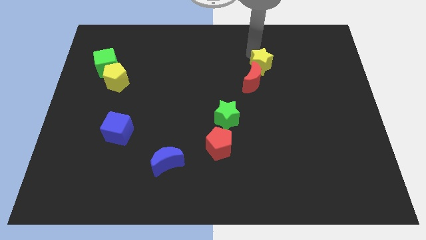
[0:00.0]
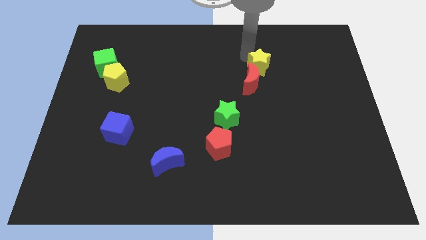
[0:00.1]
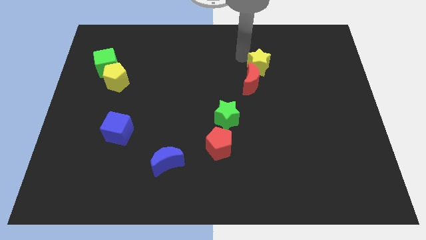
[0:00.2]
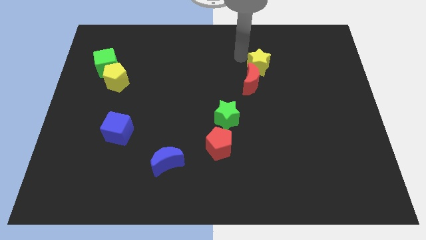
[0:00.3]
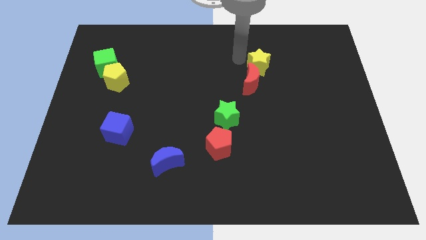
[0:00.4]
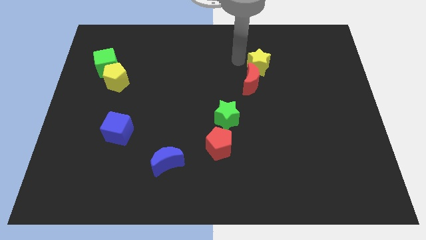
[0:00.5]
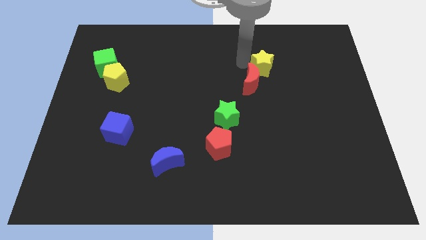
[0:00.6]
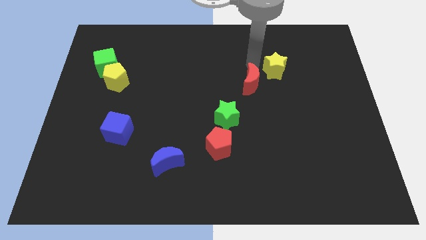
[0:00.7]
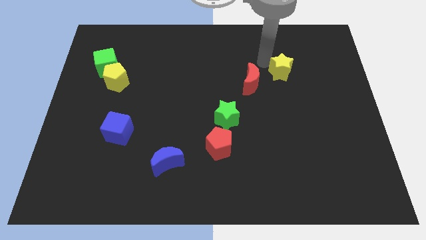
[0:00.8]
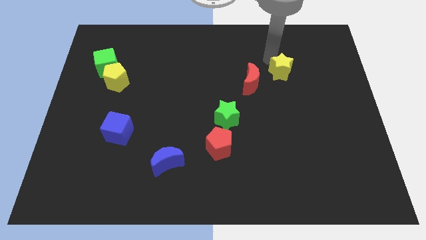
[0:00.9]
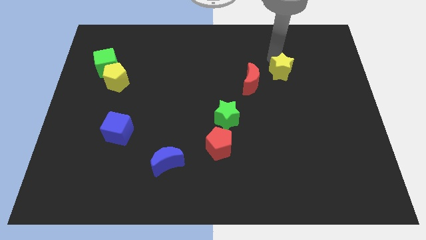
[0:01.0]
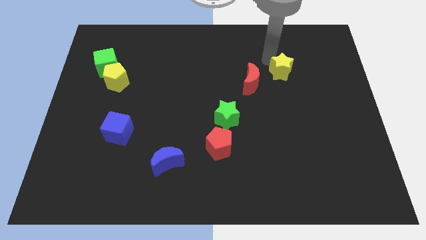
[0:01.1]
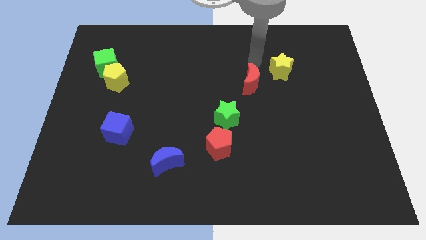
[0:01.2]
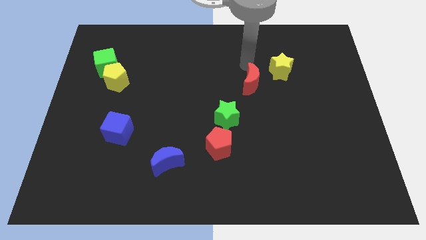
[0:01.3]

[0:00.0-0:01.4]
separate the yellow star from the red moon

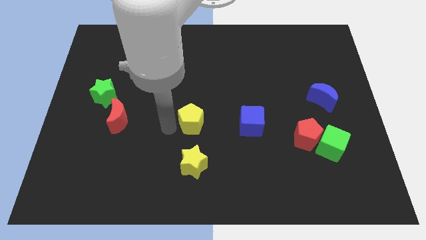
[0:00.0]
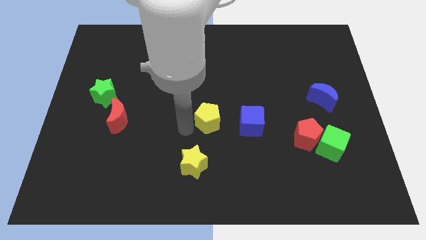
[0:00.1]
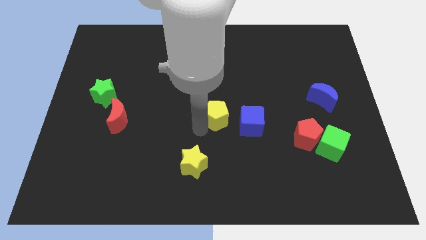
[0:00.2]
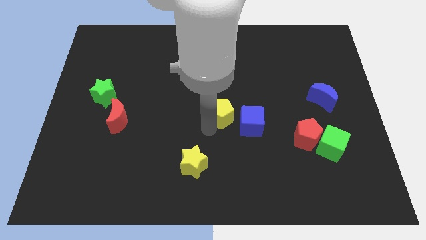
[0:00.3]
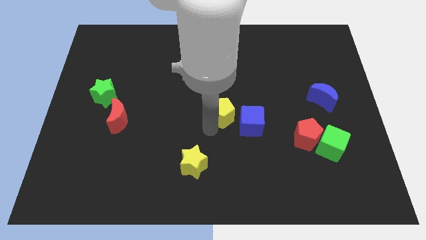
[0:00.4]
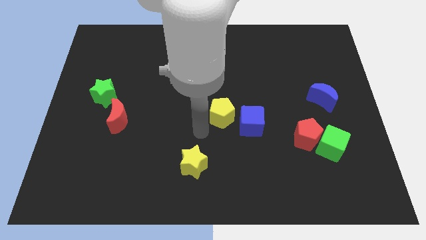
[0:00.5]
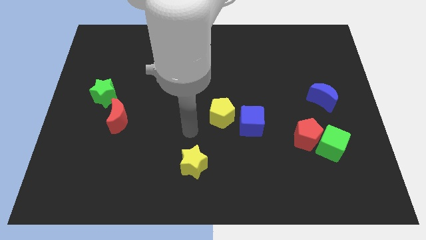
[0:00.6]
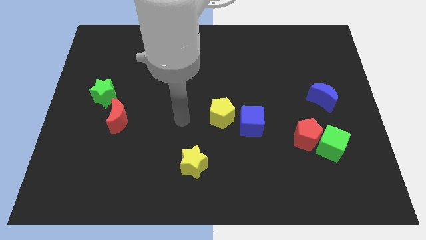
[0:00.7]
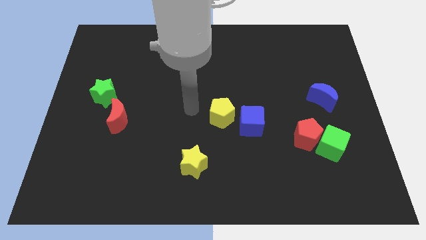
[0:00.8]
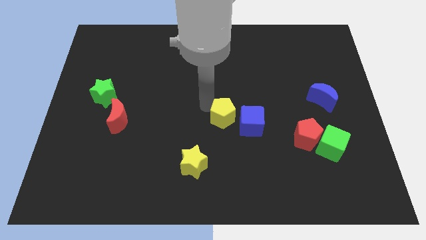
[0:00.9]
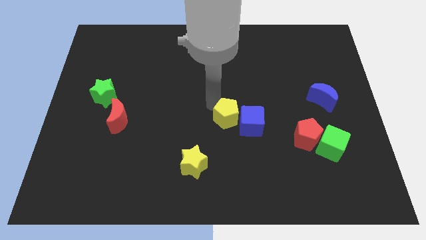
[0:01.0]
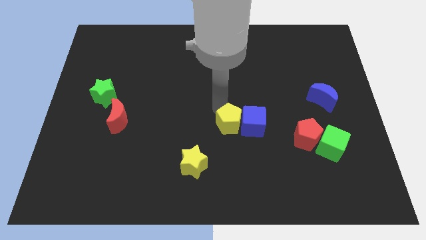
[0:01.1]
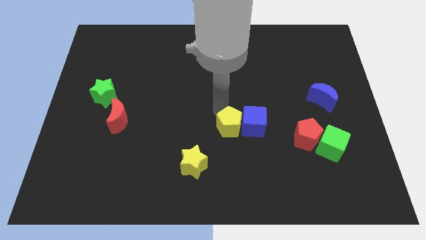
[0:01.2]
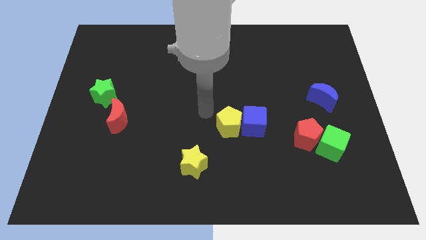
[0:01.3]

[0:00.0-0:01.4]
place the yellow pentagon to the left of the blue cube

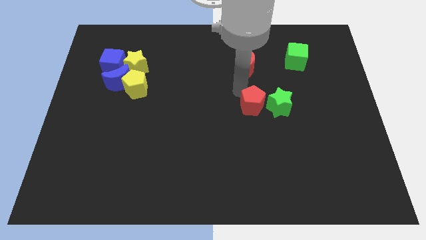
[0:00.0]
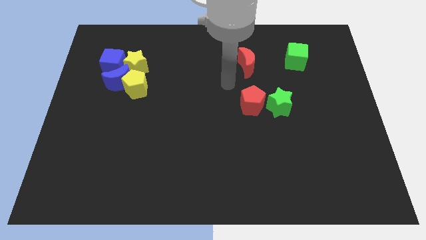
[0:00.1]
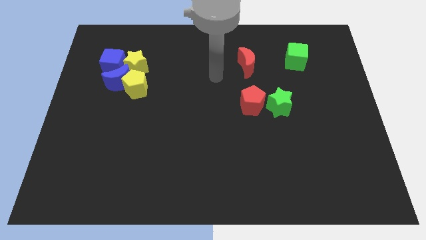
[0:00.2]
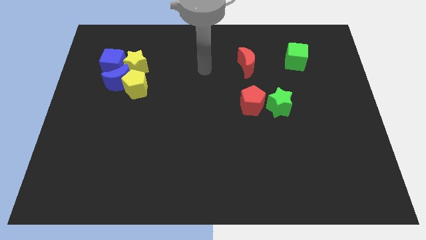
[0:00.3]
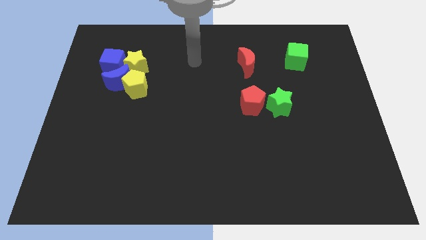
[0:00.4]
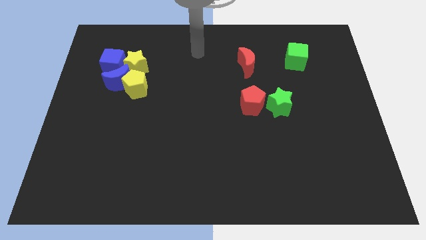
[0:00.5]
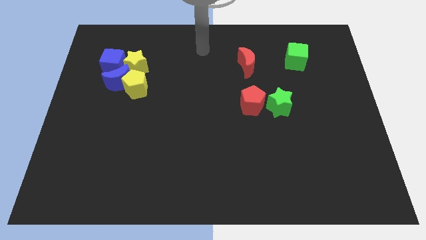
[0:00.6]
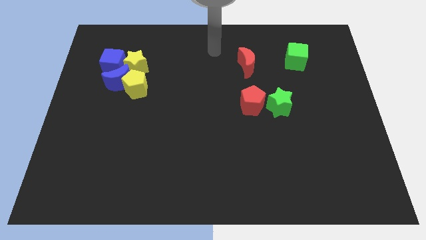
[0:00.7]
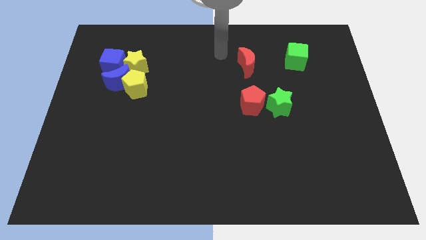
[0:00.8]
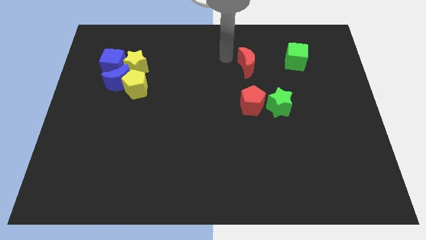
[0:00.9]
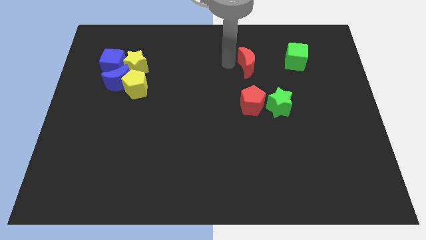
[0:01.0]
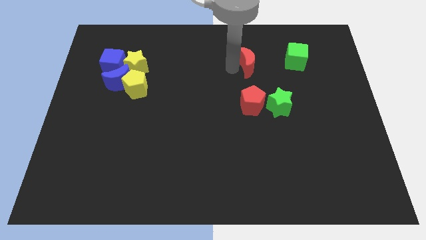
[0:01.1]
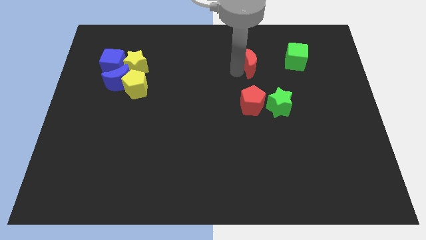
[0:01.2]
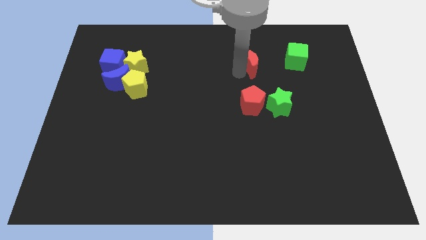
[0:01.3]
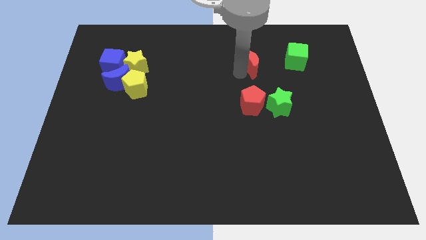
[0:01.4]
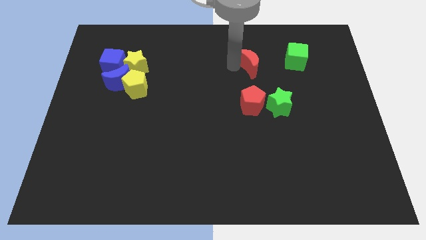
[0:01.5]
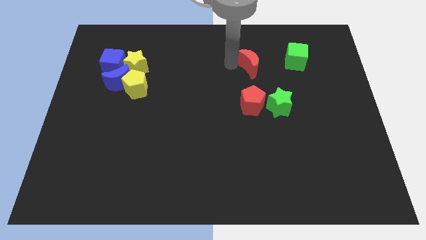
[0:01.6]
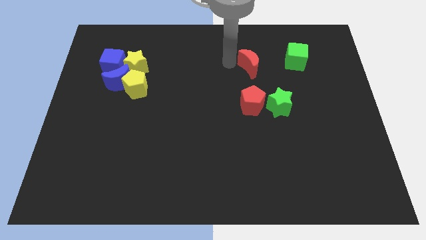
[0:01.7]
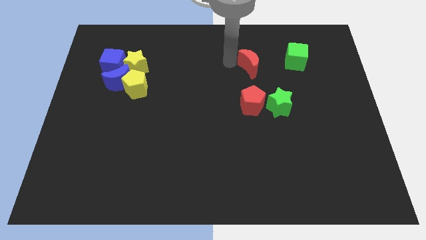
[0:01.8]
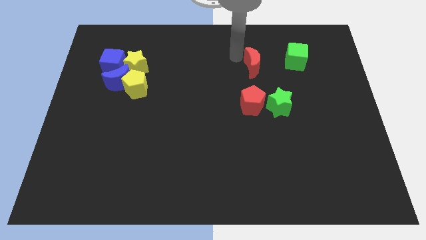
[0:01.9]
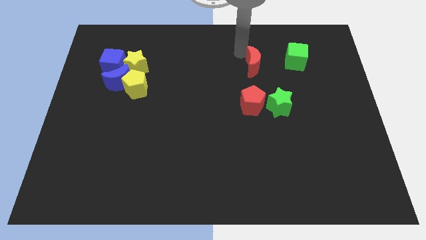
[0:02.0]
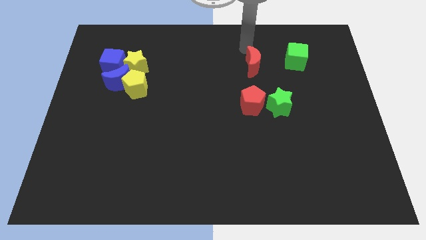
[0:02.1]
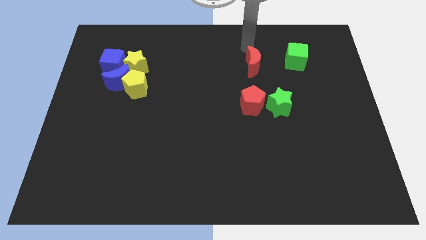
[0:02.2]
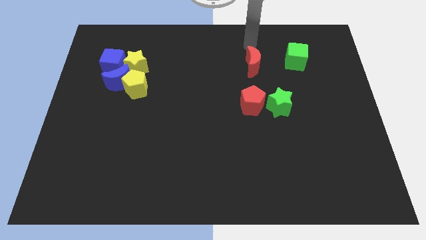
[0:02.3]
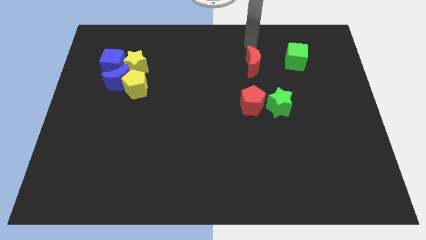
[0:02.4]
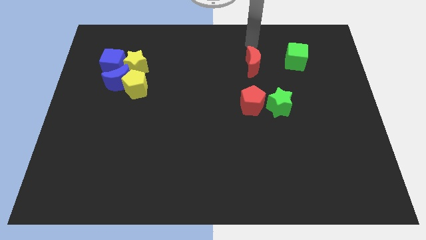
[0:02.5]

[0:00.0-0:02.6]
adjust the red moon at the top of the red pentagon

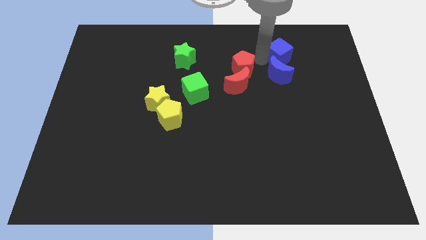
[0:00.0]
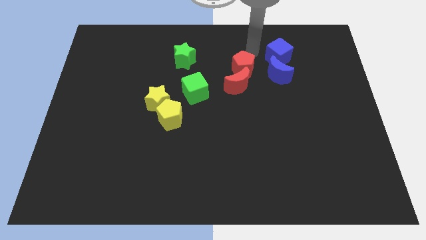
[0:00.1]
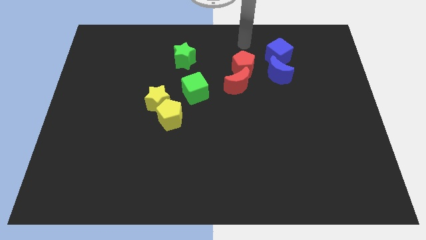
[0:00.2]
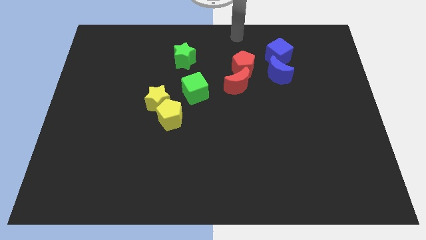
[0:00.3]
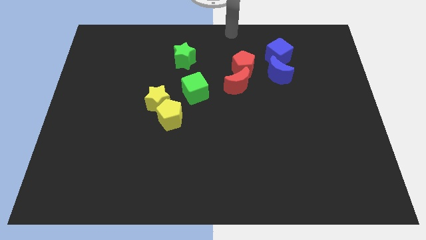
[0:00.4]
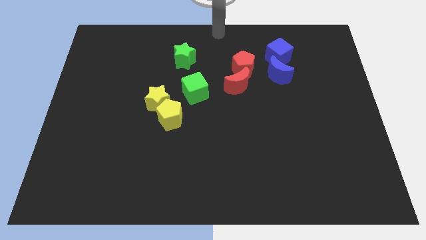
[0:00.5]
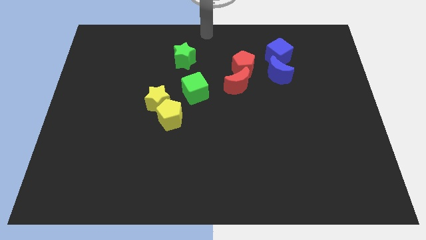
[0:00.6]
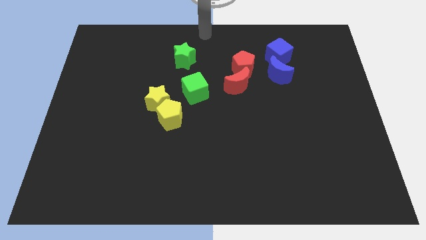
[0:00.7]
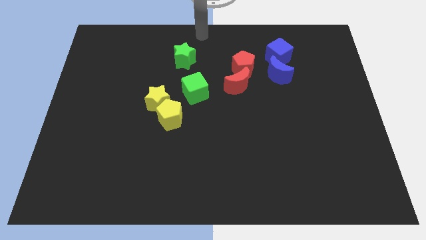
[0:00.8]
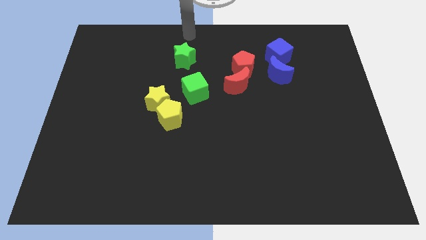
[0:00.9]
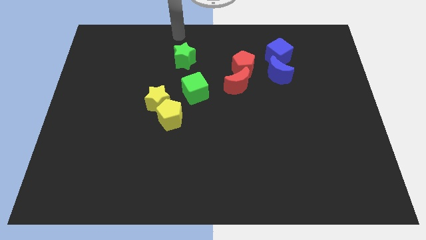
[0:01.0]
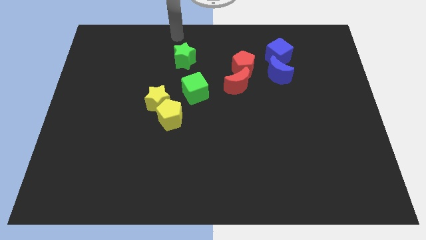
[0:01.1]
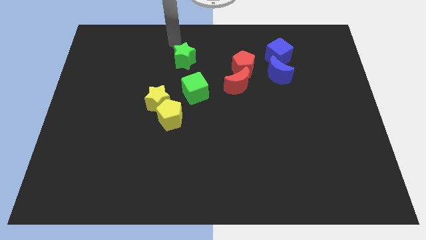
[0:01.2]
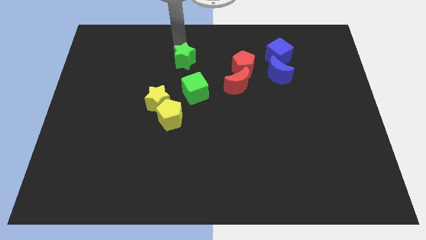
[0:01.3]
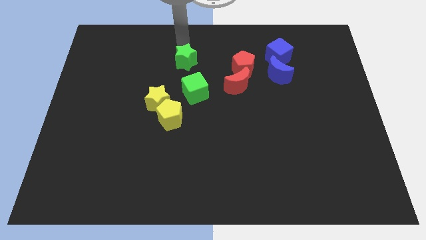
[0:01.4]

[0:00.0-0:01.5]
point your arm at the top of the green star

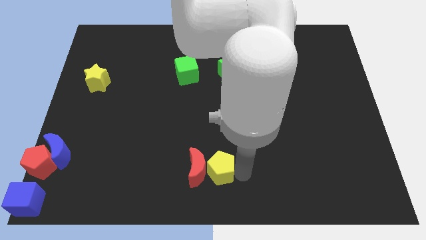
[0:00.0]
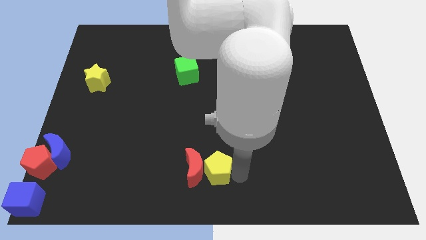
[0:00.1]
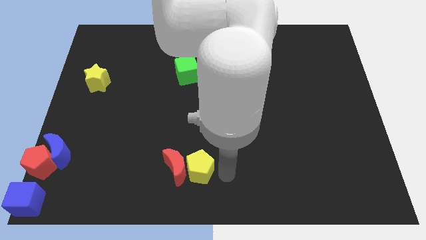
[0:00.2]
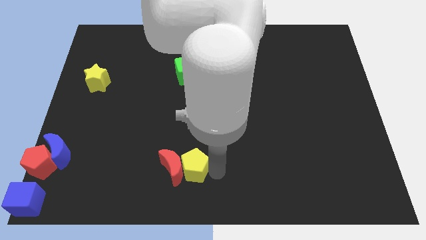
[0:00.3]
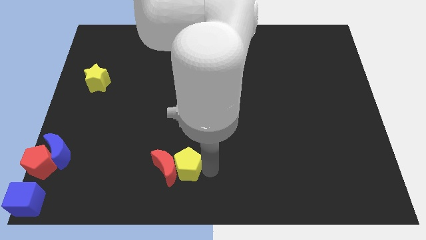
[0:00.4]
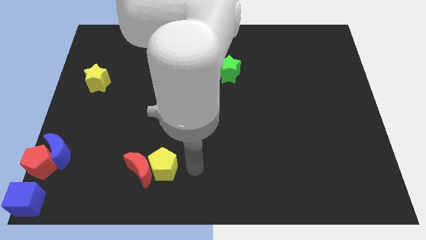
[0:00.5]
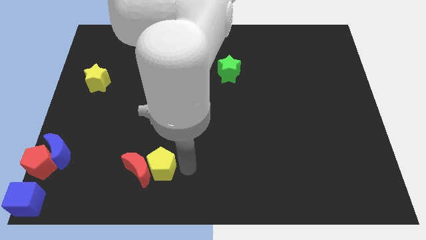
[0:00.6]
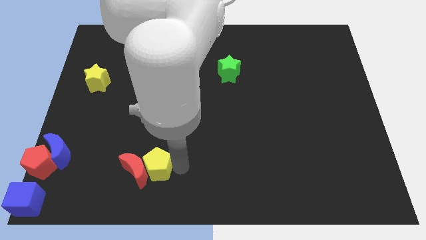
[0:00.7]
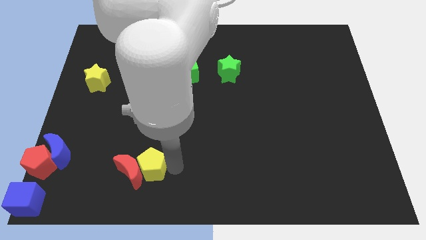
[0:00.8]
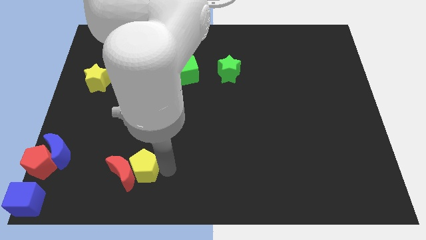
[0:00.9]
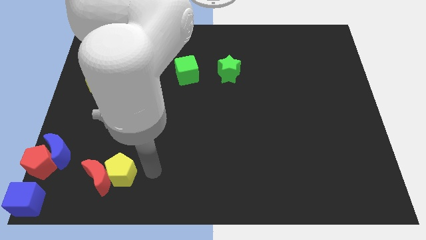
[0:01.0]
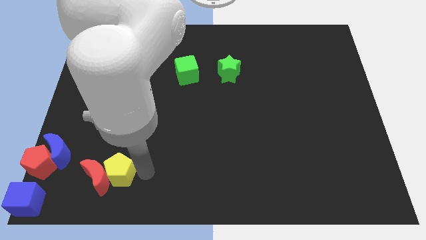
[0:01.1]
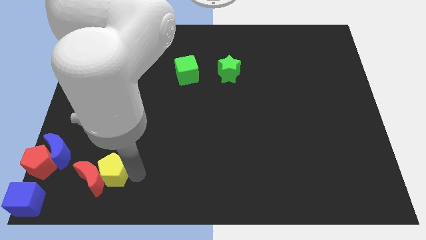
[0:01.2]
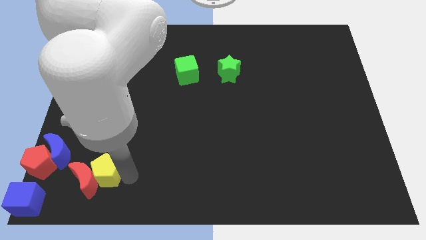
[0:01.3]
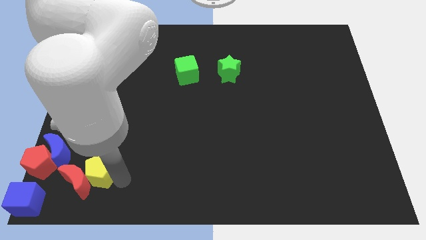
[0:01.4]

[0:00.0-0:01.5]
push the red crescent with yellow pentagon to the bottom left of the board

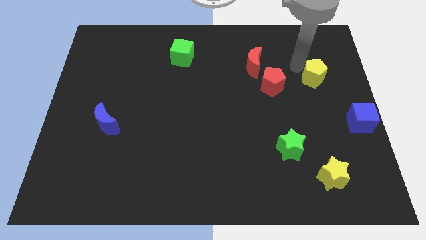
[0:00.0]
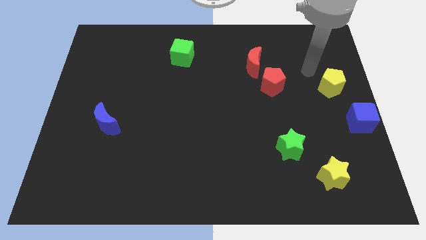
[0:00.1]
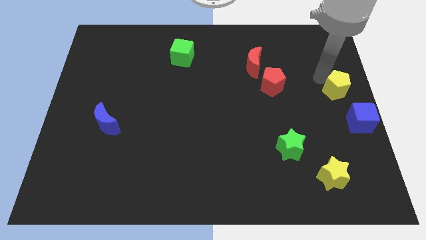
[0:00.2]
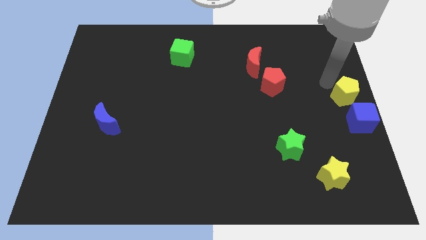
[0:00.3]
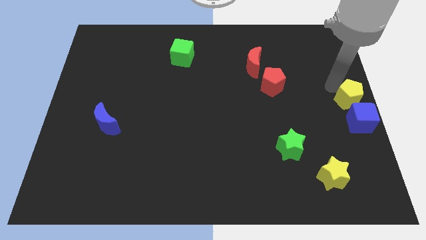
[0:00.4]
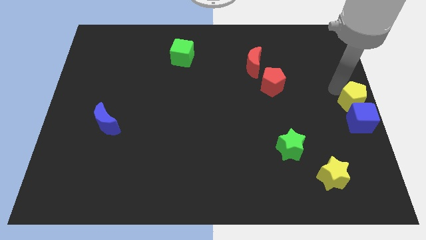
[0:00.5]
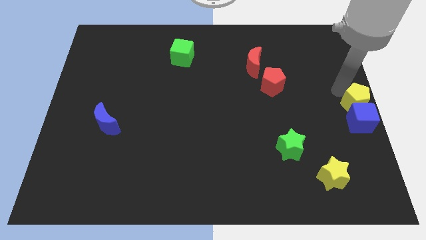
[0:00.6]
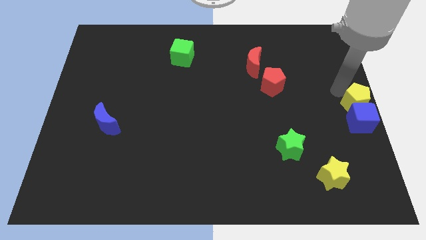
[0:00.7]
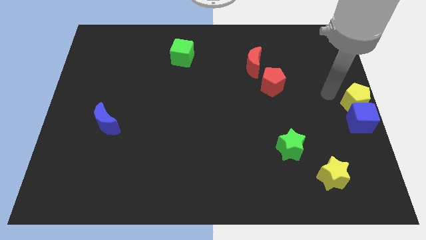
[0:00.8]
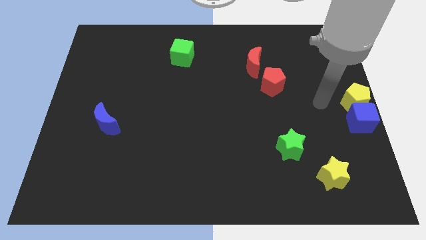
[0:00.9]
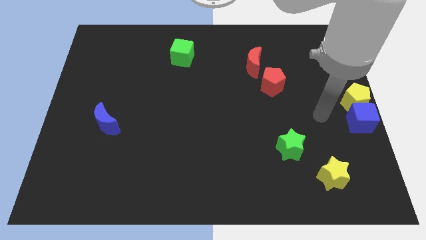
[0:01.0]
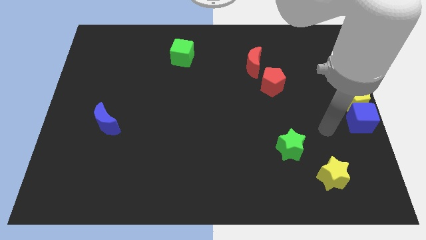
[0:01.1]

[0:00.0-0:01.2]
place the yellow pentagon vertically above the blue cube
